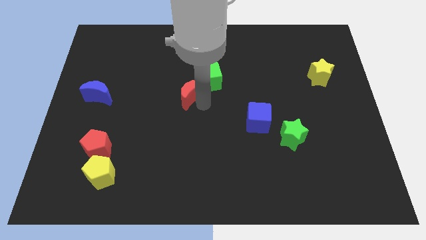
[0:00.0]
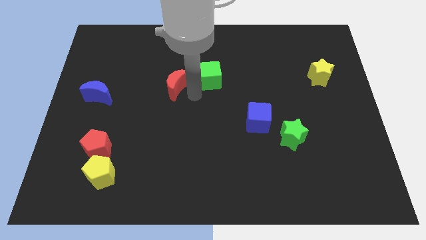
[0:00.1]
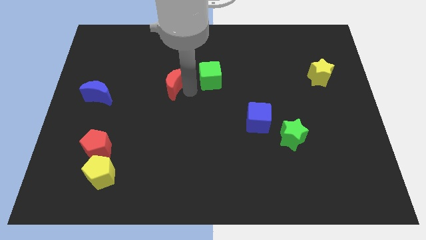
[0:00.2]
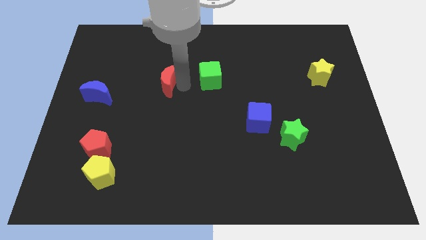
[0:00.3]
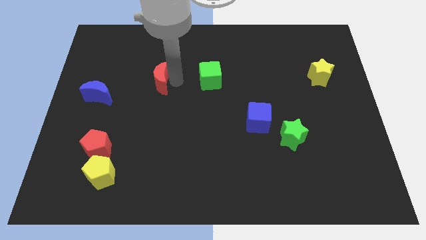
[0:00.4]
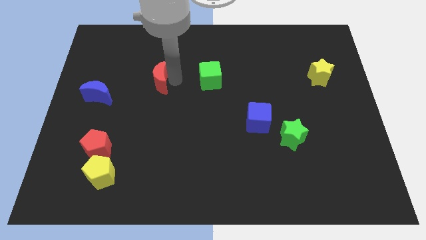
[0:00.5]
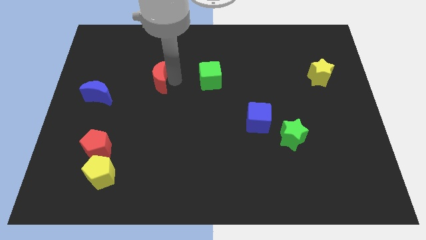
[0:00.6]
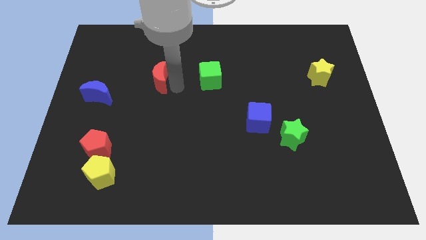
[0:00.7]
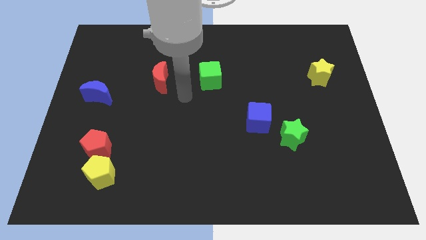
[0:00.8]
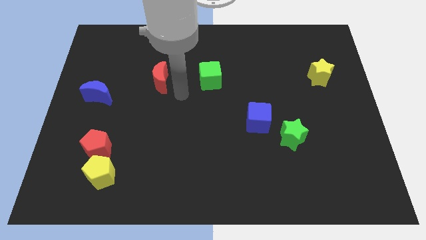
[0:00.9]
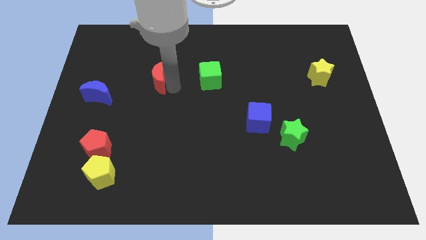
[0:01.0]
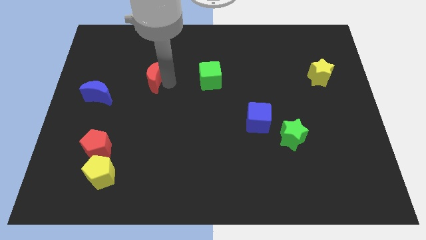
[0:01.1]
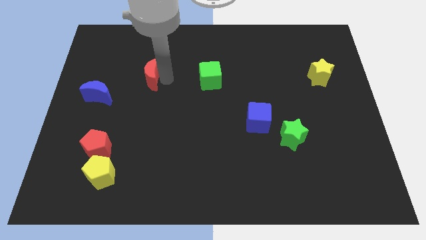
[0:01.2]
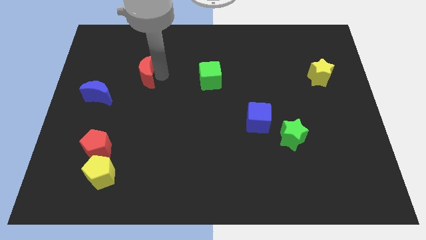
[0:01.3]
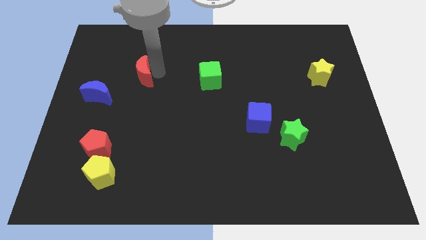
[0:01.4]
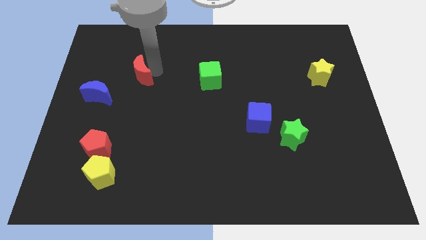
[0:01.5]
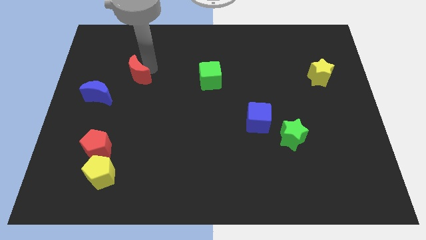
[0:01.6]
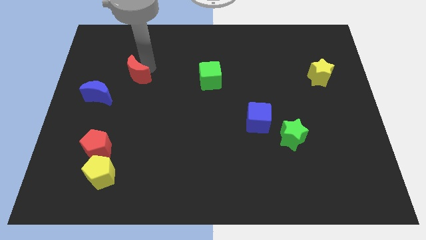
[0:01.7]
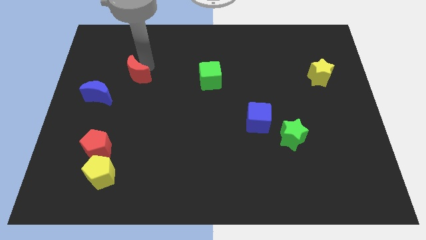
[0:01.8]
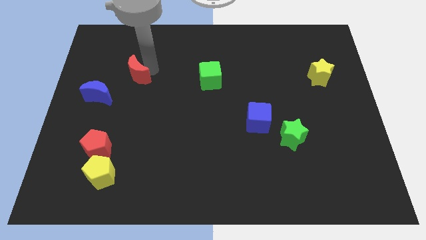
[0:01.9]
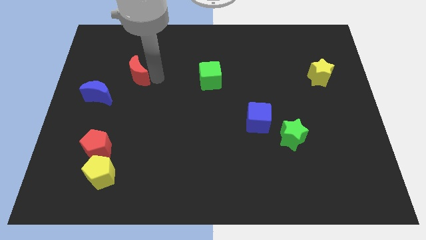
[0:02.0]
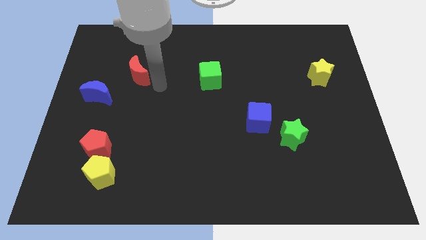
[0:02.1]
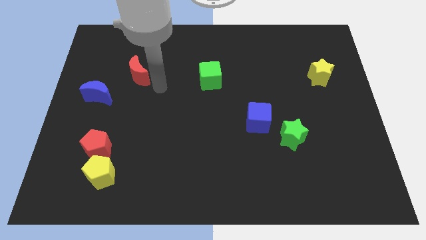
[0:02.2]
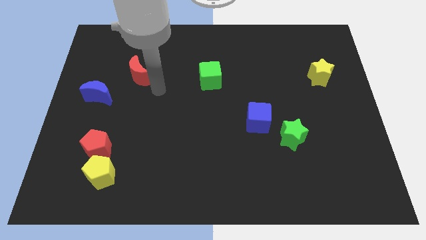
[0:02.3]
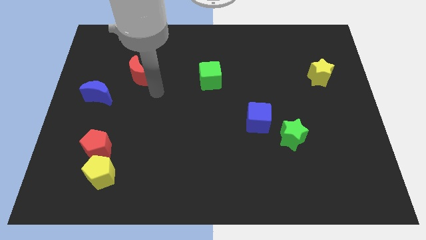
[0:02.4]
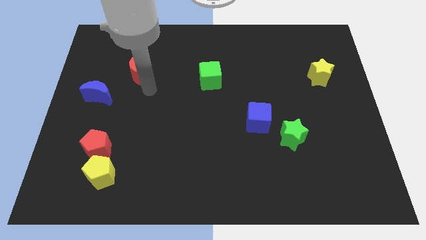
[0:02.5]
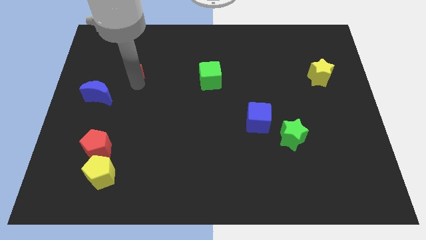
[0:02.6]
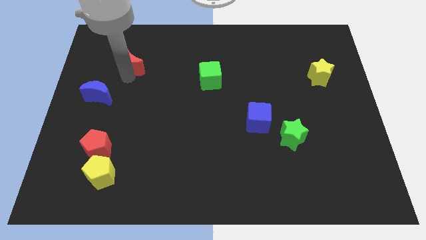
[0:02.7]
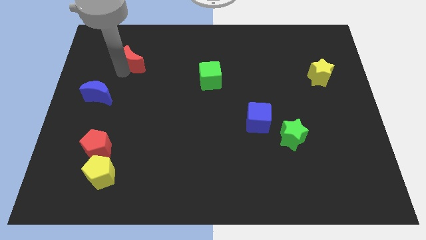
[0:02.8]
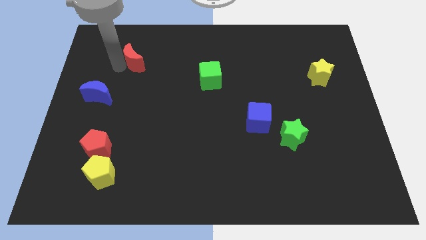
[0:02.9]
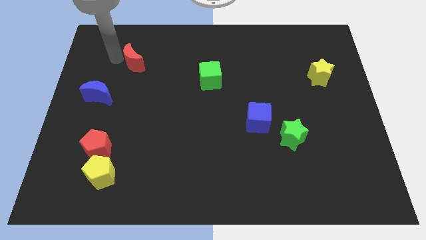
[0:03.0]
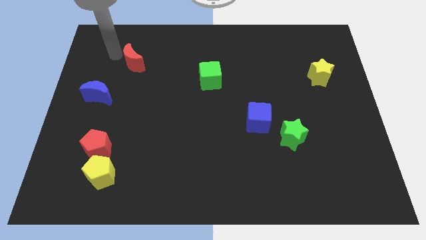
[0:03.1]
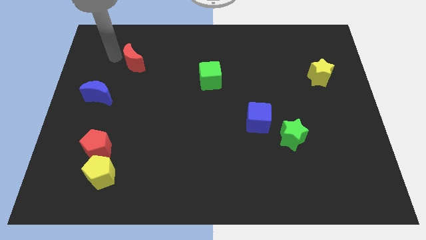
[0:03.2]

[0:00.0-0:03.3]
push the red crescent to the top right of the blue crescent

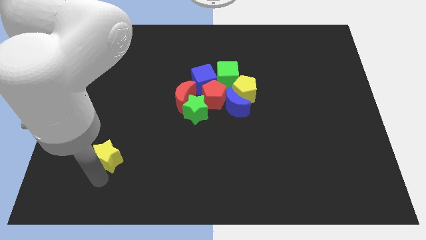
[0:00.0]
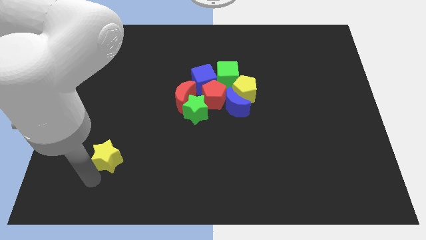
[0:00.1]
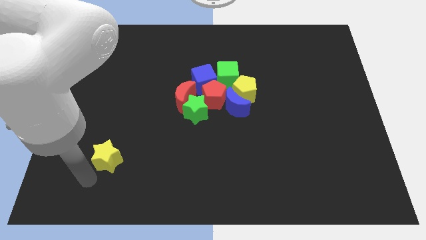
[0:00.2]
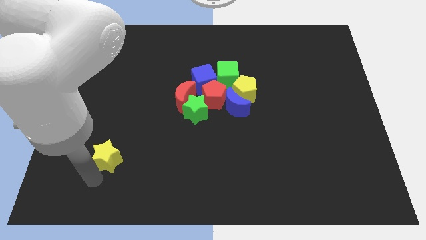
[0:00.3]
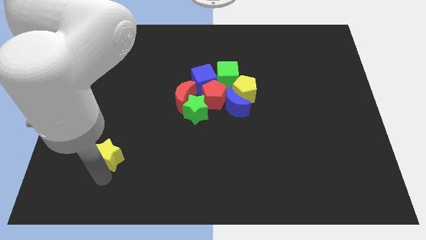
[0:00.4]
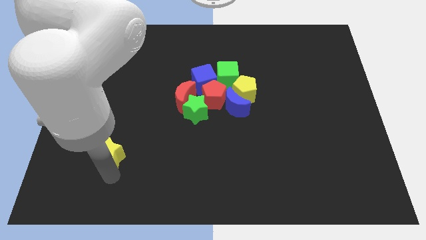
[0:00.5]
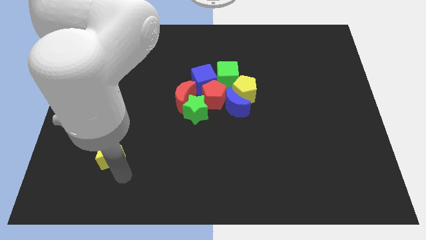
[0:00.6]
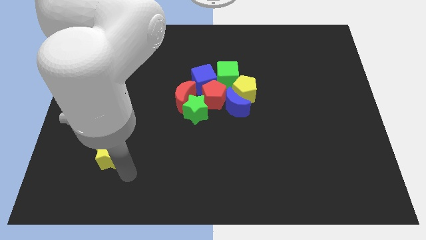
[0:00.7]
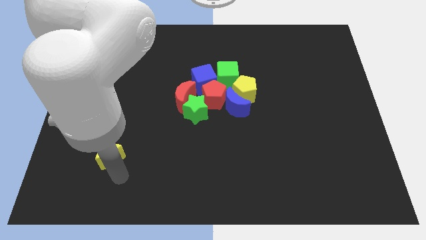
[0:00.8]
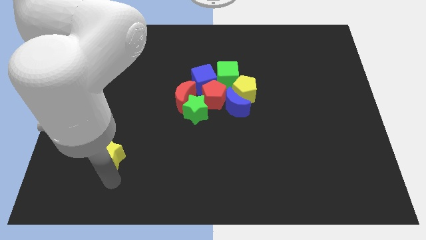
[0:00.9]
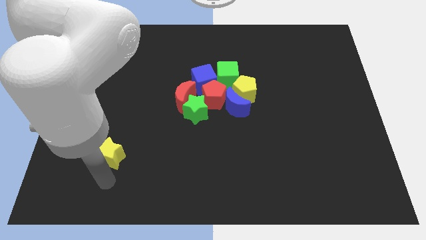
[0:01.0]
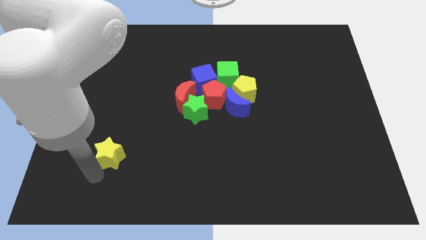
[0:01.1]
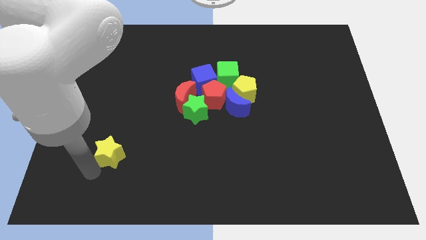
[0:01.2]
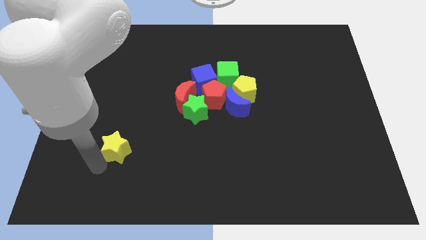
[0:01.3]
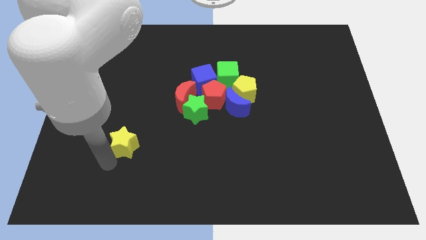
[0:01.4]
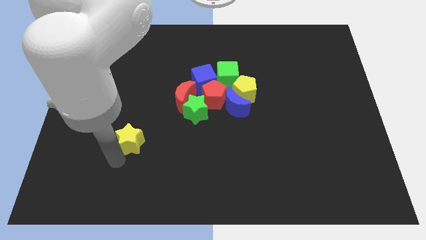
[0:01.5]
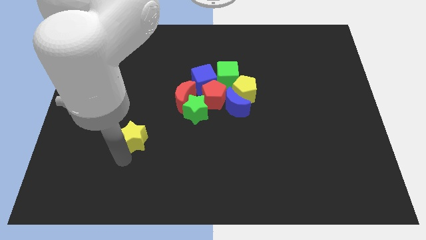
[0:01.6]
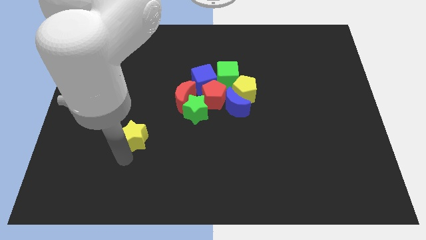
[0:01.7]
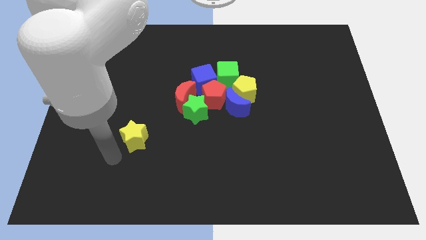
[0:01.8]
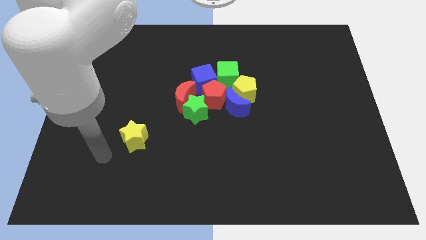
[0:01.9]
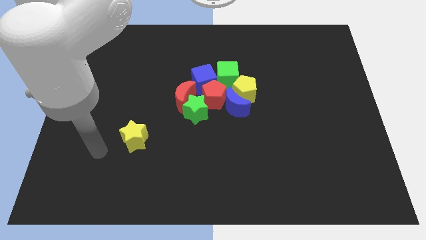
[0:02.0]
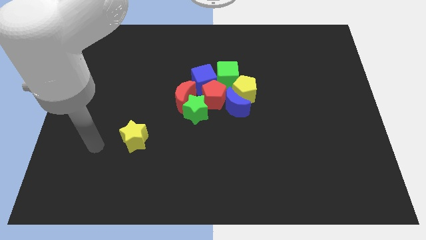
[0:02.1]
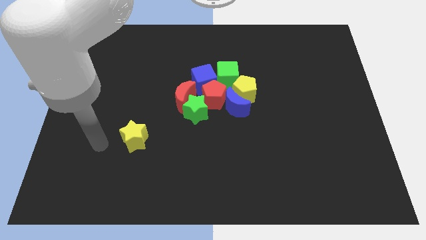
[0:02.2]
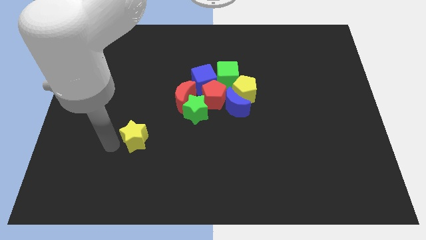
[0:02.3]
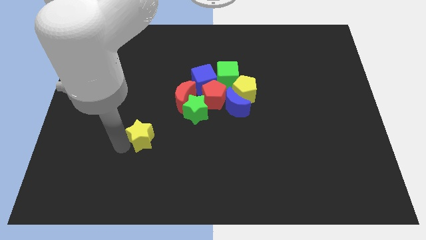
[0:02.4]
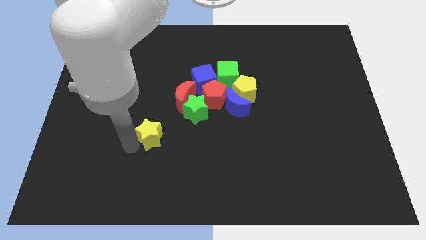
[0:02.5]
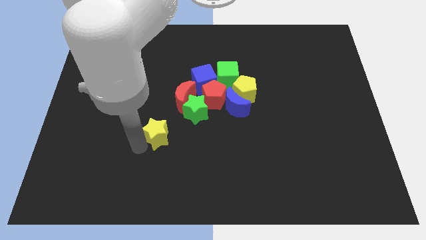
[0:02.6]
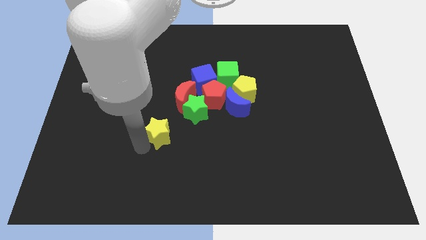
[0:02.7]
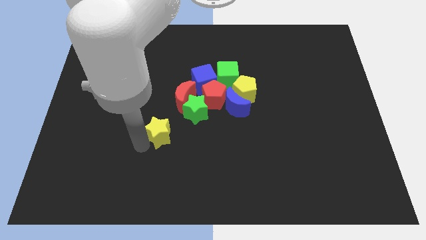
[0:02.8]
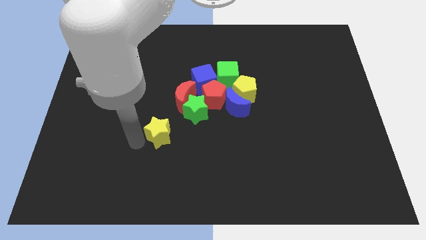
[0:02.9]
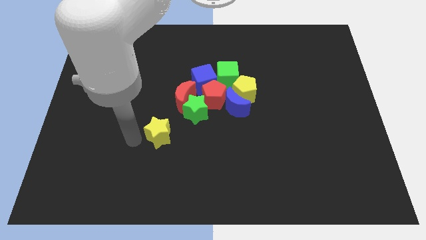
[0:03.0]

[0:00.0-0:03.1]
move yellow star towards green star

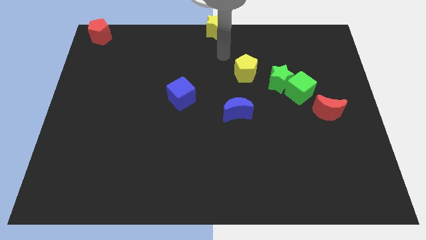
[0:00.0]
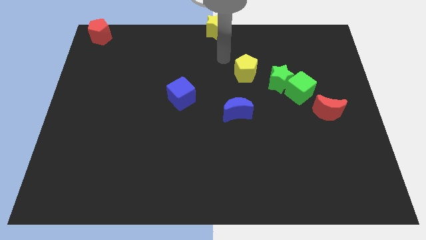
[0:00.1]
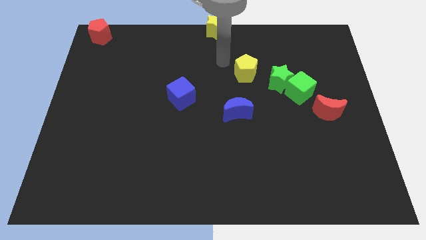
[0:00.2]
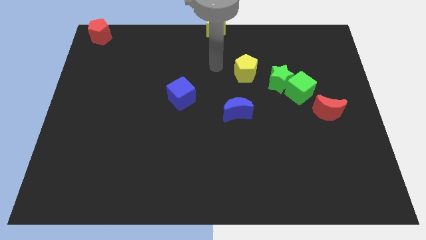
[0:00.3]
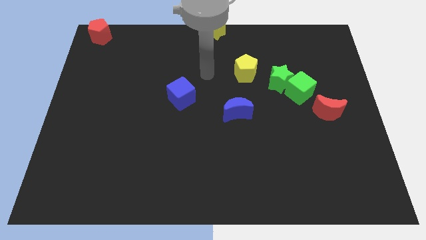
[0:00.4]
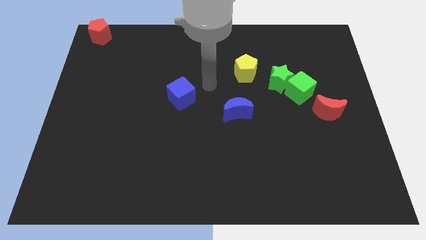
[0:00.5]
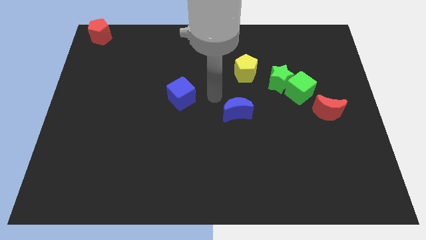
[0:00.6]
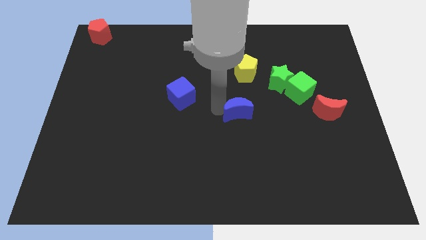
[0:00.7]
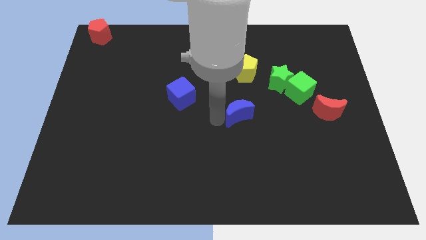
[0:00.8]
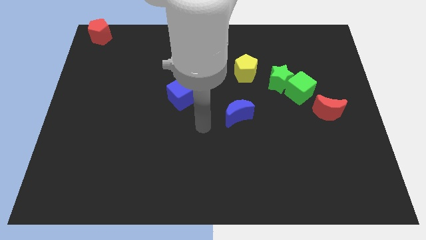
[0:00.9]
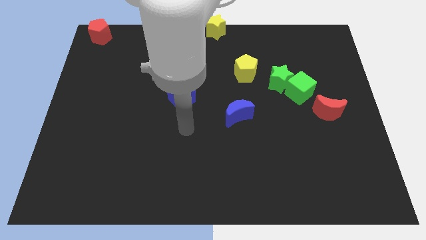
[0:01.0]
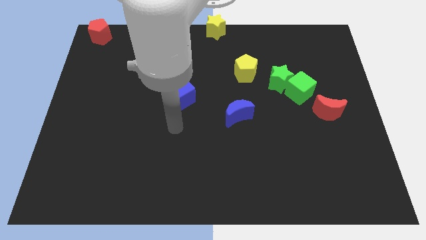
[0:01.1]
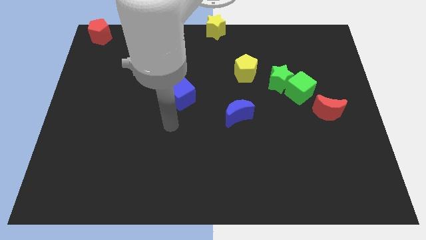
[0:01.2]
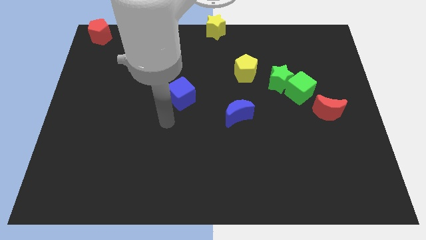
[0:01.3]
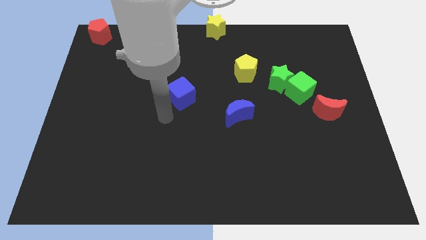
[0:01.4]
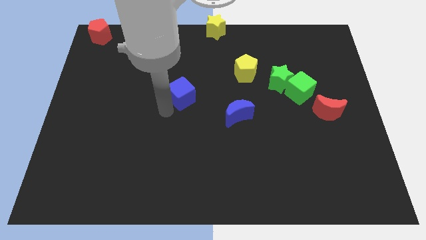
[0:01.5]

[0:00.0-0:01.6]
slightly touch left to the blue moon

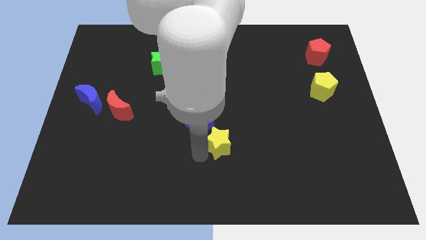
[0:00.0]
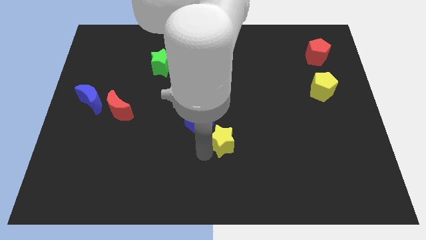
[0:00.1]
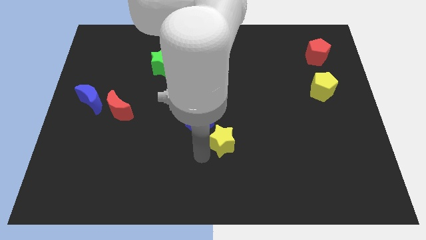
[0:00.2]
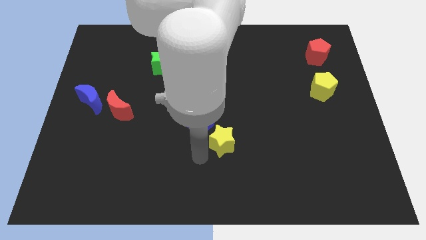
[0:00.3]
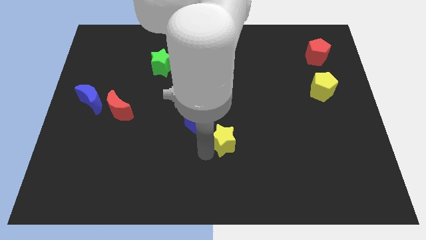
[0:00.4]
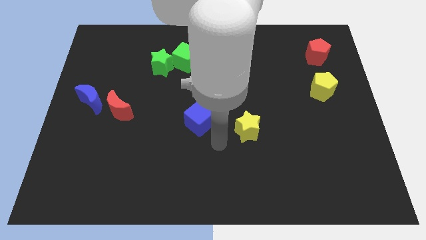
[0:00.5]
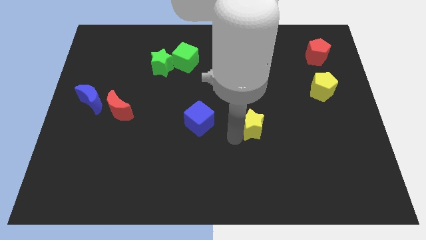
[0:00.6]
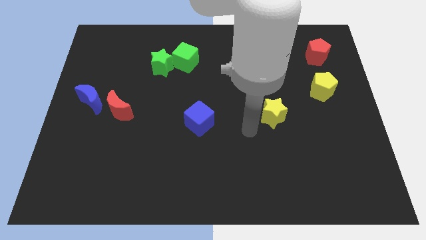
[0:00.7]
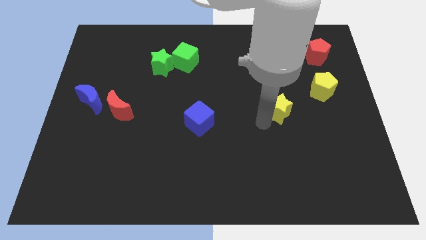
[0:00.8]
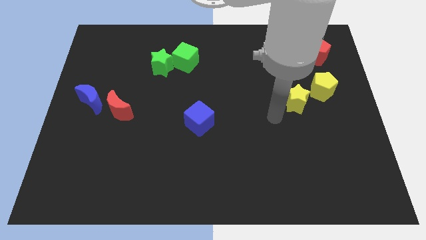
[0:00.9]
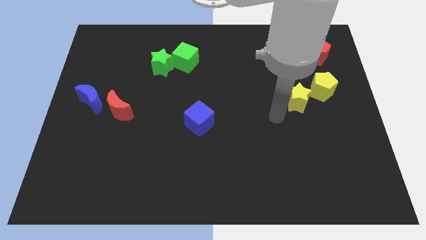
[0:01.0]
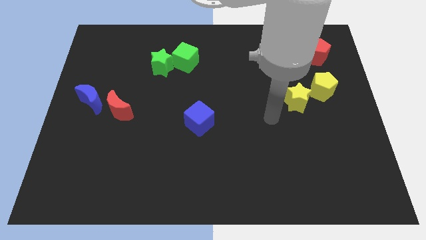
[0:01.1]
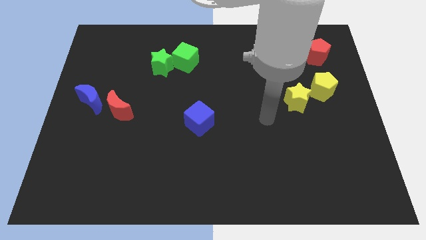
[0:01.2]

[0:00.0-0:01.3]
move the yellow star towards the yellow pentagon
